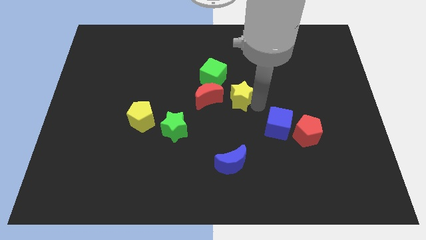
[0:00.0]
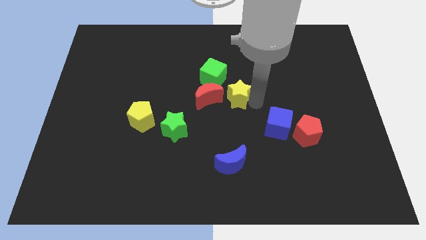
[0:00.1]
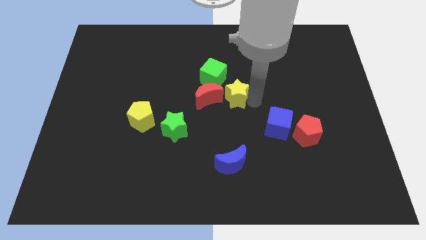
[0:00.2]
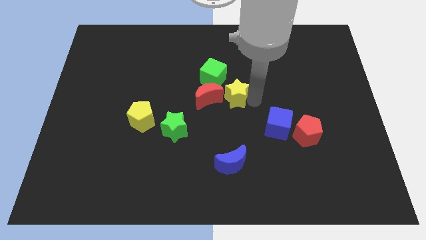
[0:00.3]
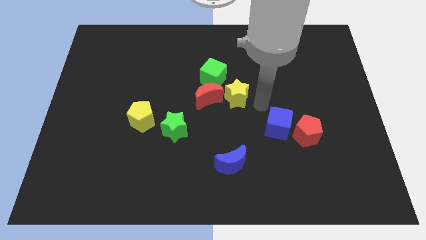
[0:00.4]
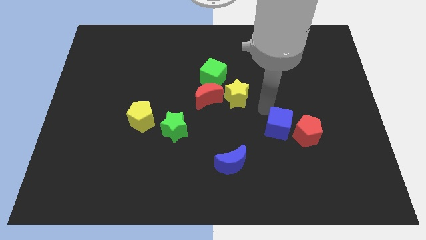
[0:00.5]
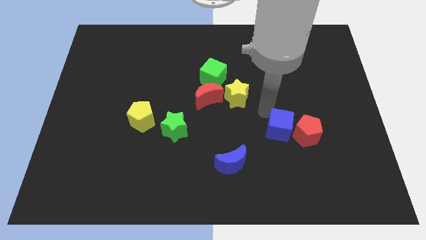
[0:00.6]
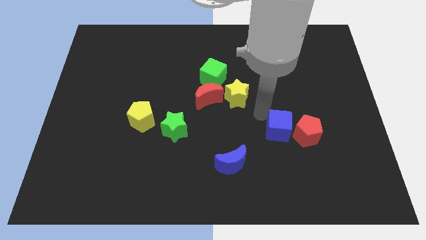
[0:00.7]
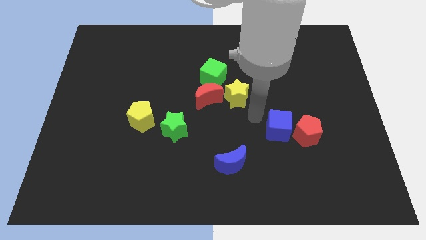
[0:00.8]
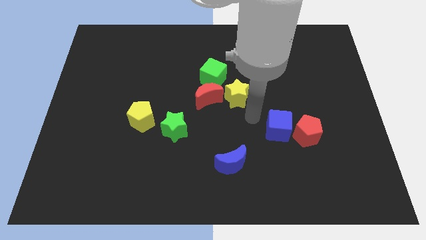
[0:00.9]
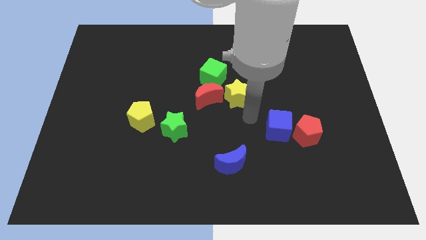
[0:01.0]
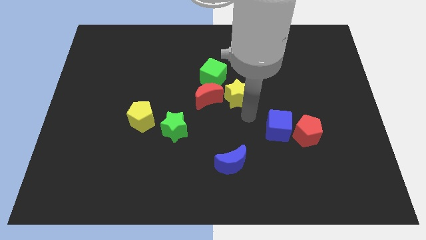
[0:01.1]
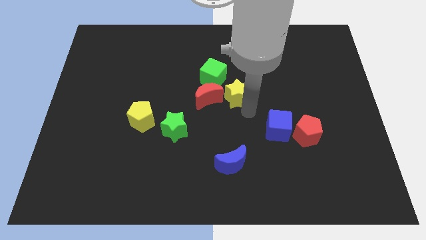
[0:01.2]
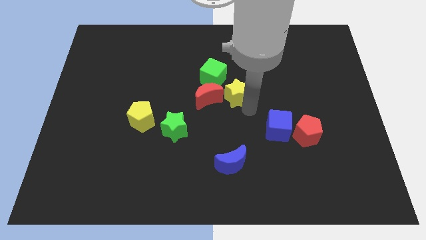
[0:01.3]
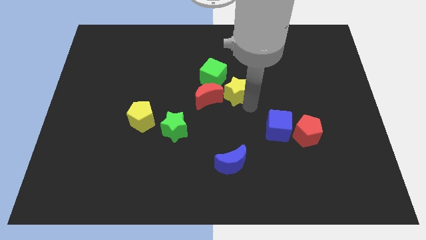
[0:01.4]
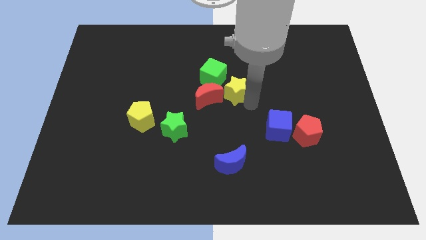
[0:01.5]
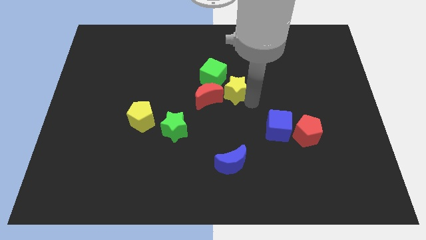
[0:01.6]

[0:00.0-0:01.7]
push the yellow star towards the green cube

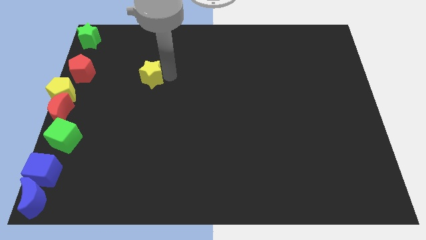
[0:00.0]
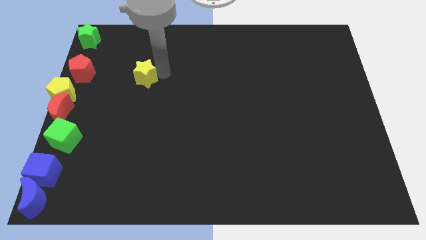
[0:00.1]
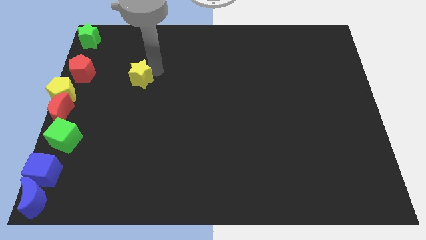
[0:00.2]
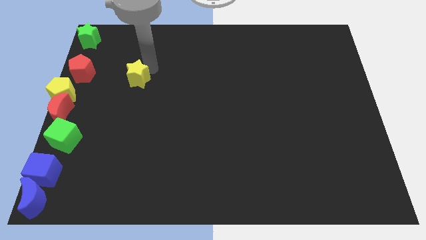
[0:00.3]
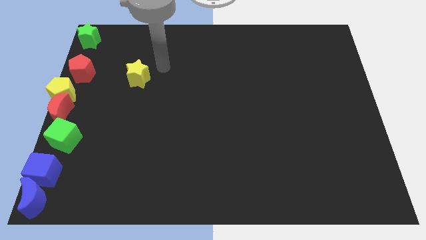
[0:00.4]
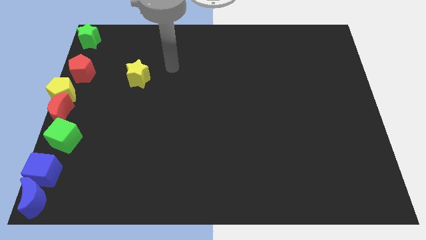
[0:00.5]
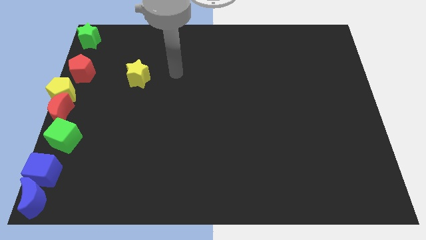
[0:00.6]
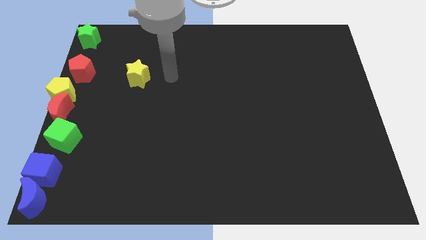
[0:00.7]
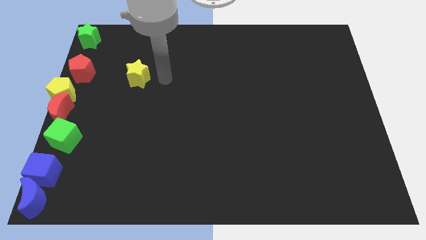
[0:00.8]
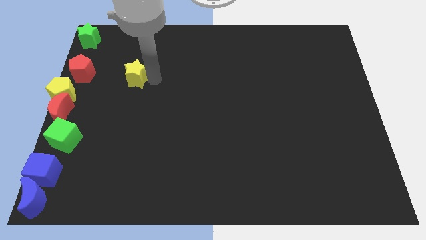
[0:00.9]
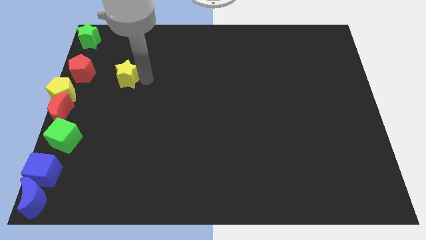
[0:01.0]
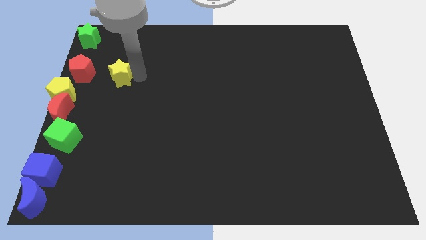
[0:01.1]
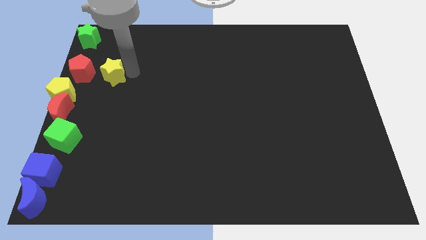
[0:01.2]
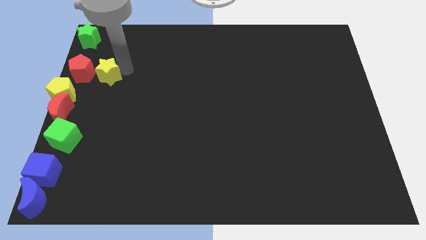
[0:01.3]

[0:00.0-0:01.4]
put the yellow star adjacent to the red pentagon

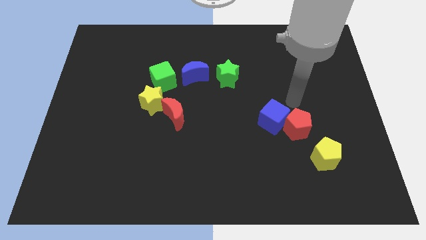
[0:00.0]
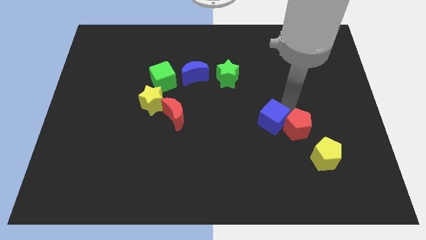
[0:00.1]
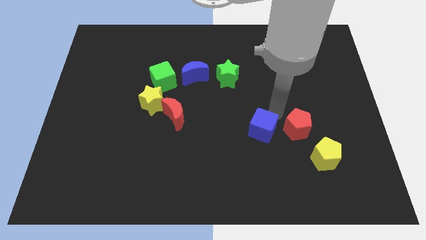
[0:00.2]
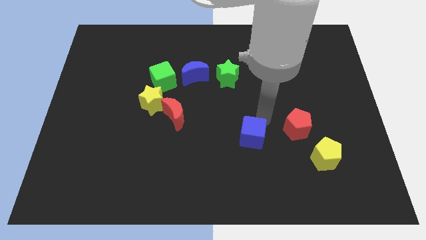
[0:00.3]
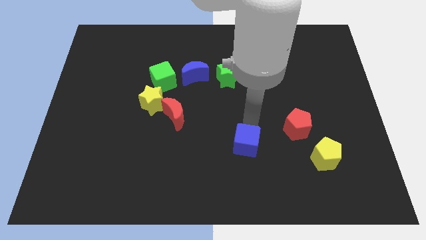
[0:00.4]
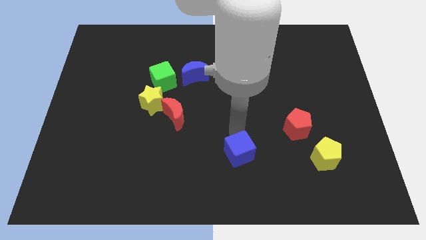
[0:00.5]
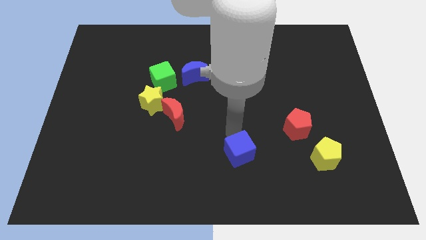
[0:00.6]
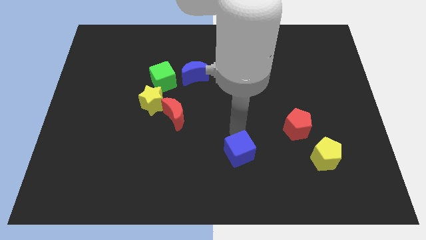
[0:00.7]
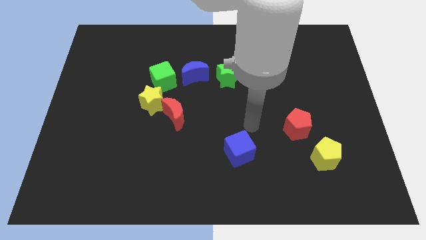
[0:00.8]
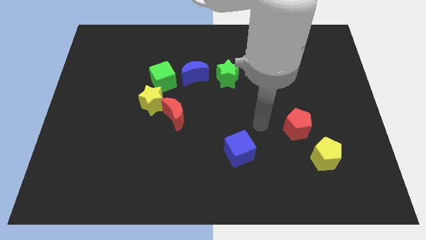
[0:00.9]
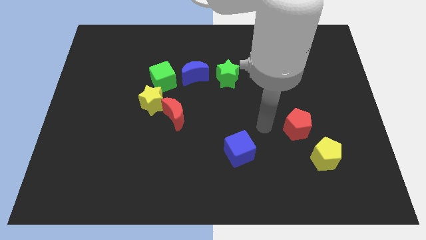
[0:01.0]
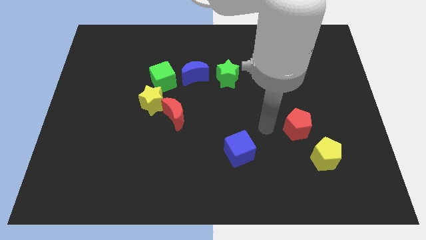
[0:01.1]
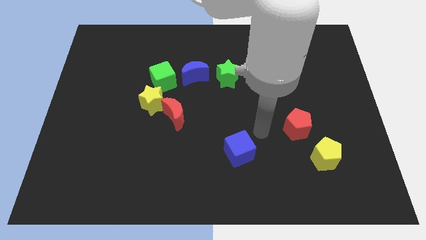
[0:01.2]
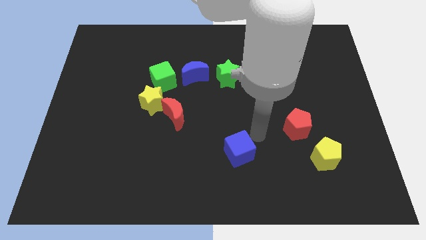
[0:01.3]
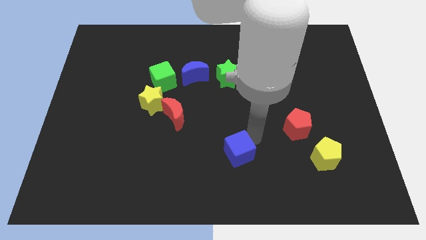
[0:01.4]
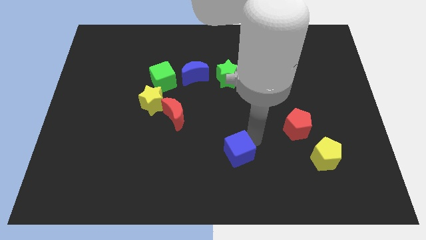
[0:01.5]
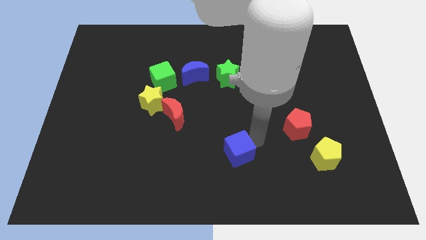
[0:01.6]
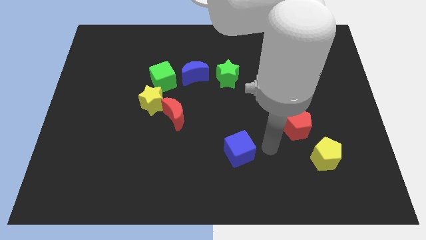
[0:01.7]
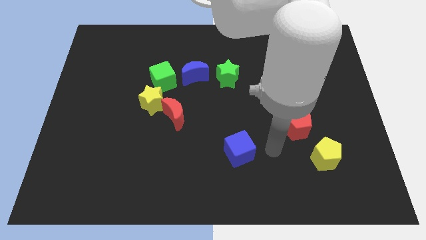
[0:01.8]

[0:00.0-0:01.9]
push the blue cube towards bottom center of the board

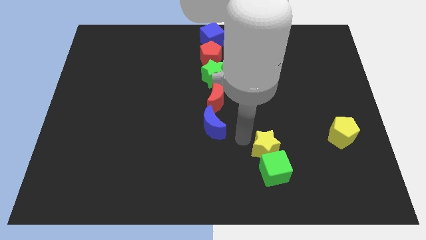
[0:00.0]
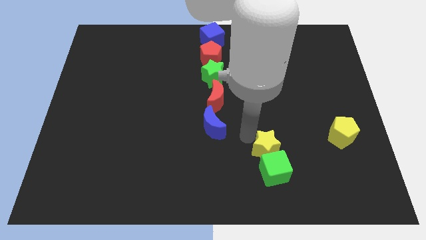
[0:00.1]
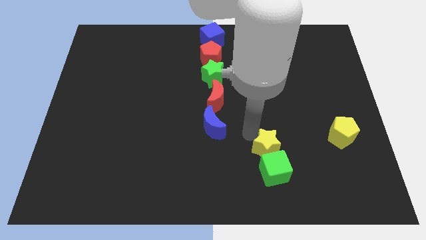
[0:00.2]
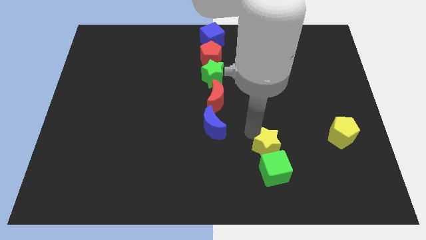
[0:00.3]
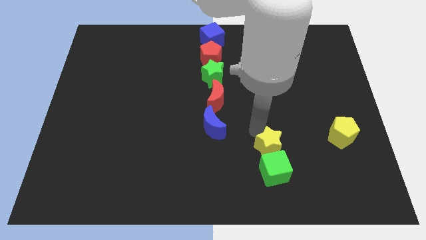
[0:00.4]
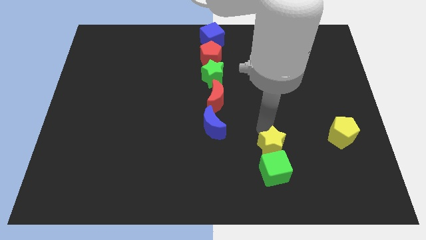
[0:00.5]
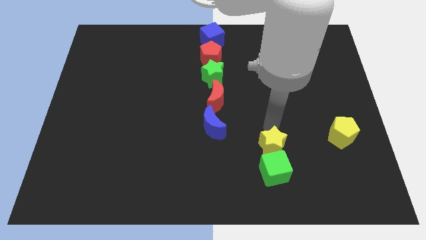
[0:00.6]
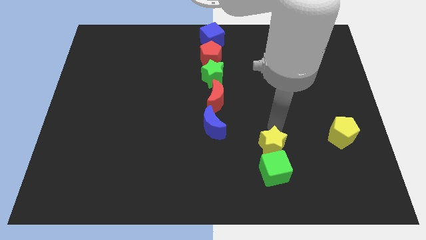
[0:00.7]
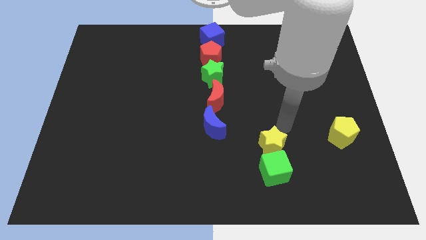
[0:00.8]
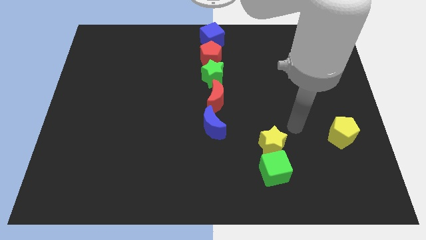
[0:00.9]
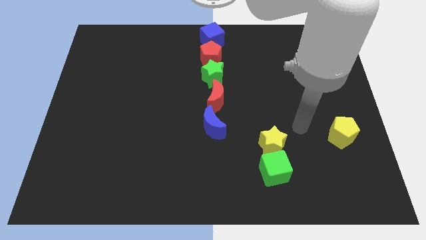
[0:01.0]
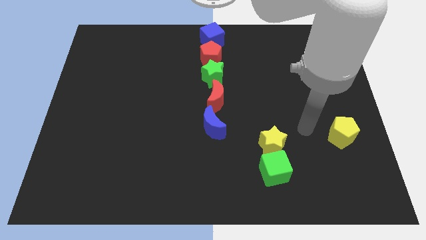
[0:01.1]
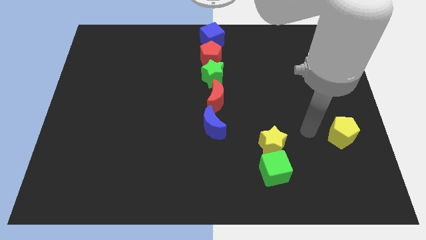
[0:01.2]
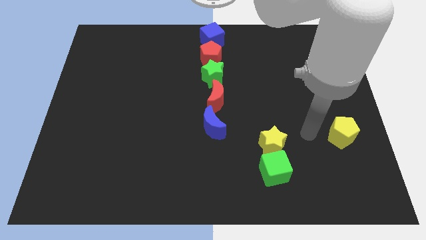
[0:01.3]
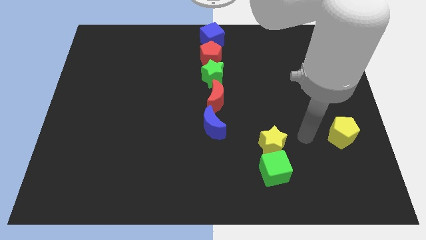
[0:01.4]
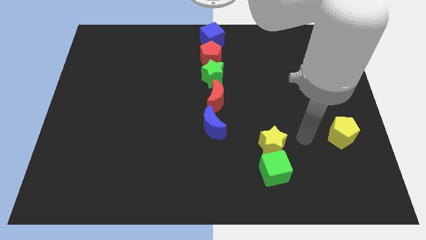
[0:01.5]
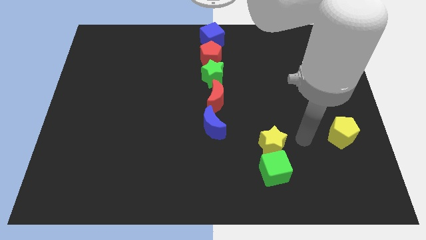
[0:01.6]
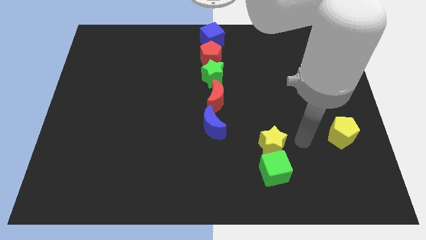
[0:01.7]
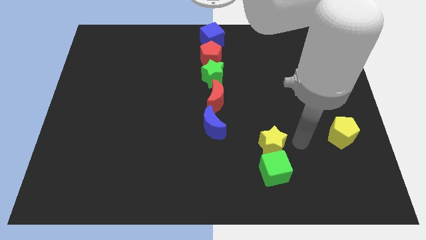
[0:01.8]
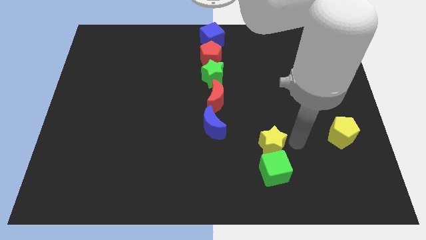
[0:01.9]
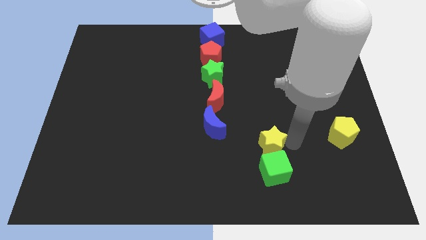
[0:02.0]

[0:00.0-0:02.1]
move your arm to the right of the yellow star

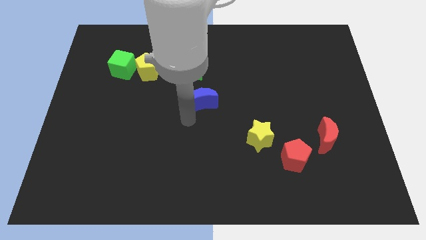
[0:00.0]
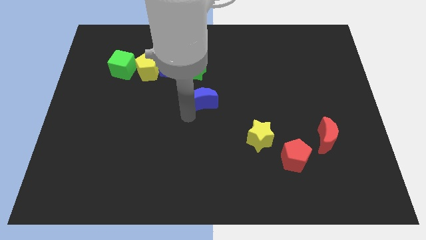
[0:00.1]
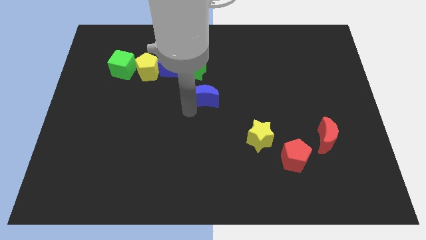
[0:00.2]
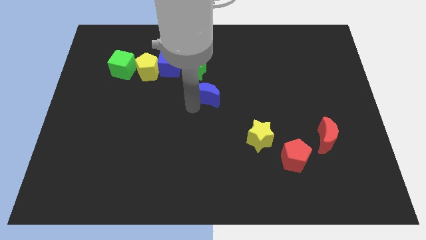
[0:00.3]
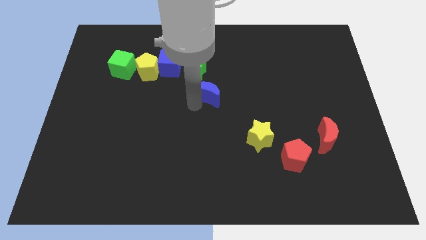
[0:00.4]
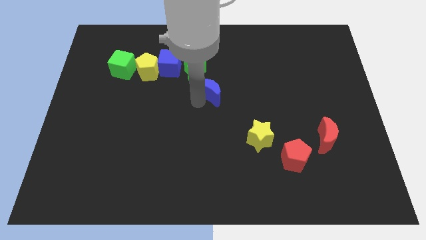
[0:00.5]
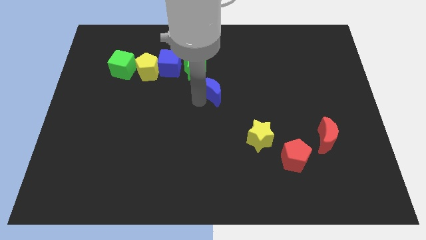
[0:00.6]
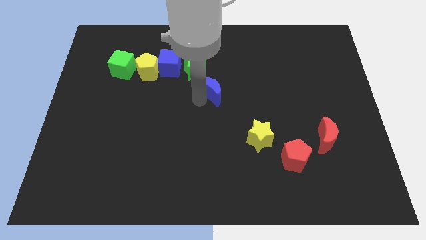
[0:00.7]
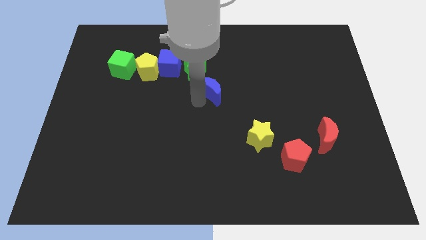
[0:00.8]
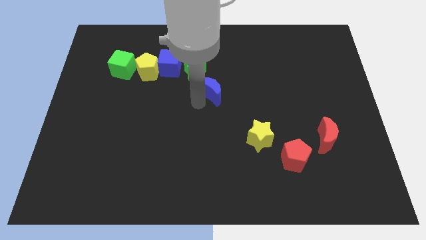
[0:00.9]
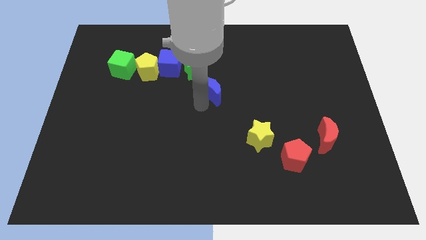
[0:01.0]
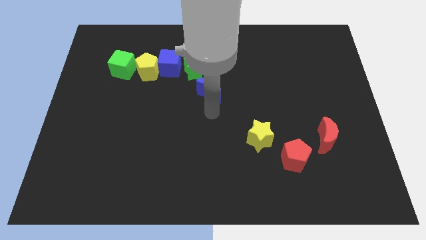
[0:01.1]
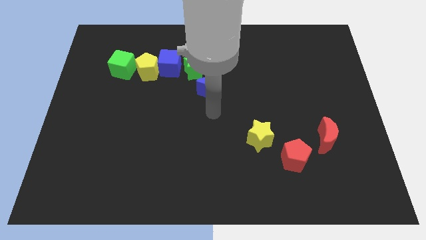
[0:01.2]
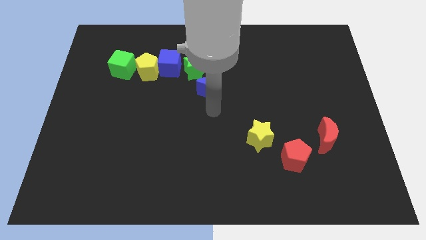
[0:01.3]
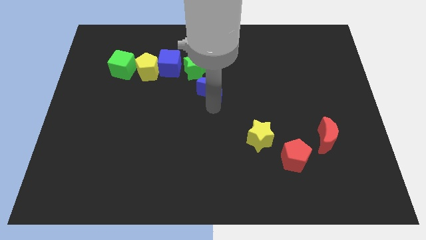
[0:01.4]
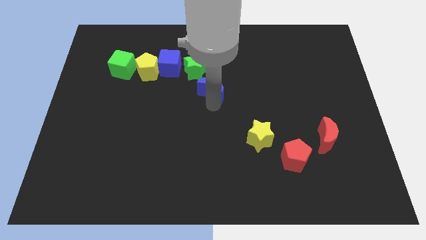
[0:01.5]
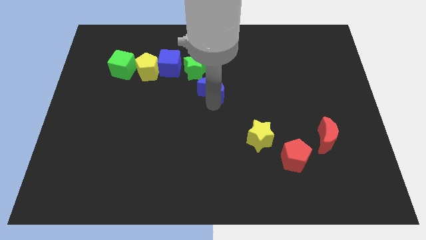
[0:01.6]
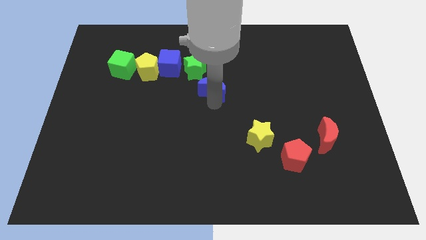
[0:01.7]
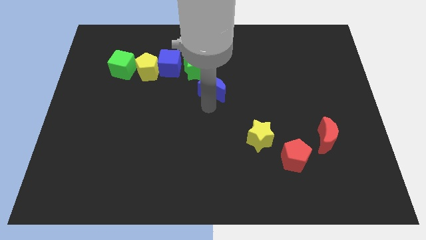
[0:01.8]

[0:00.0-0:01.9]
push the blue moon diagonally bottom right to the green star
